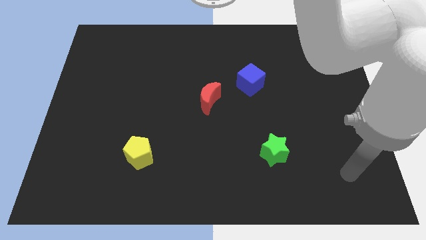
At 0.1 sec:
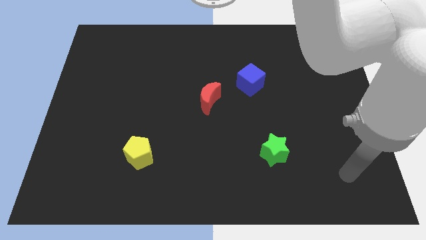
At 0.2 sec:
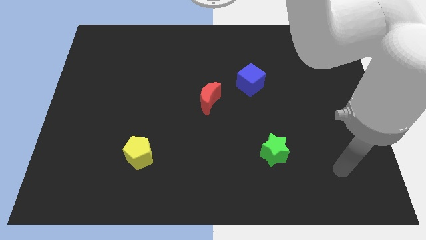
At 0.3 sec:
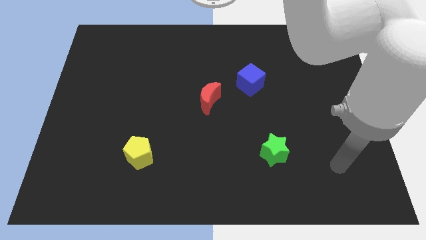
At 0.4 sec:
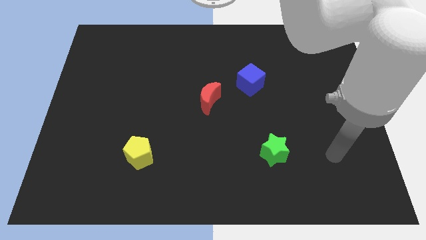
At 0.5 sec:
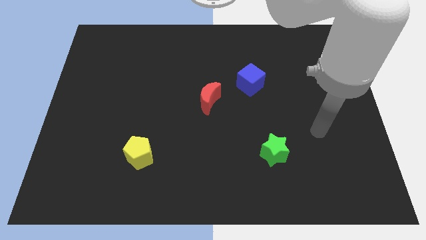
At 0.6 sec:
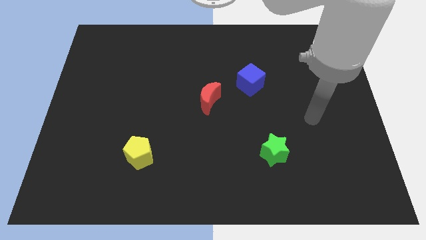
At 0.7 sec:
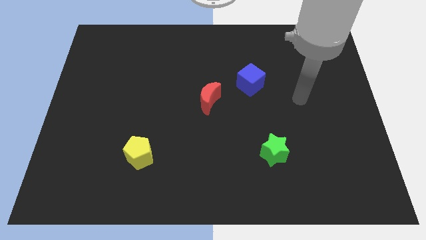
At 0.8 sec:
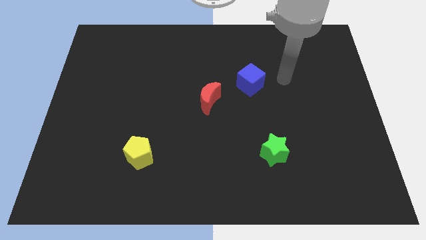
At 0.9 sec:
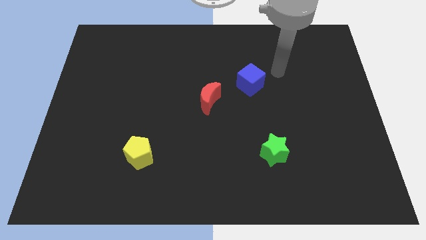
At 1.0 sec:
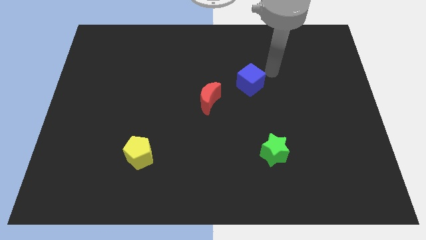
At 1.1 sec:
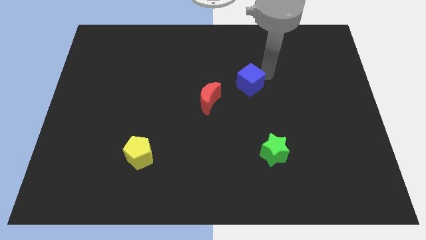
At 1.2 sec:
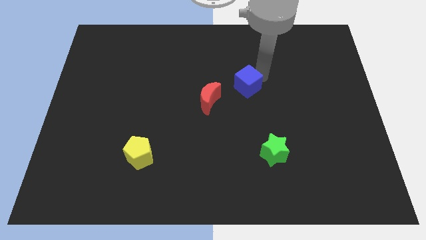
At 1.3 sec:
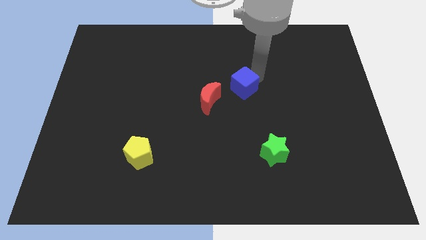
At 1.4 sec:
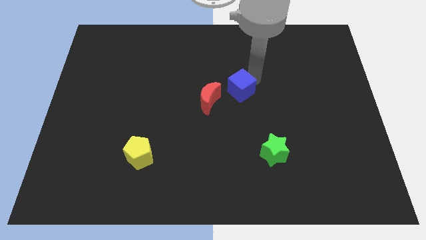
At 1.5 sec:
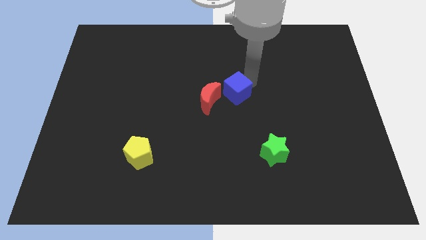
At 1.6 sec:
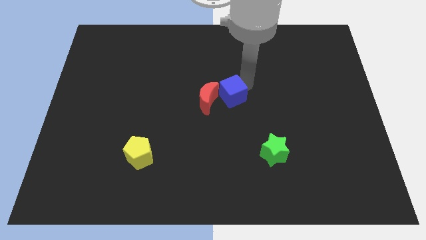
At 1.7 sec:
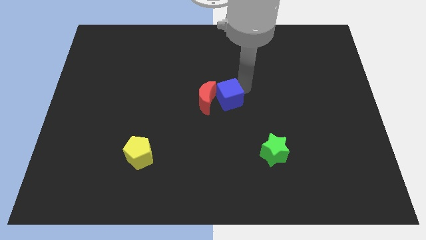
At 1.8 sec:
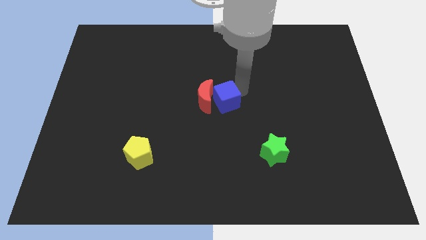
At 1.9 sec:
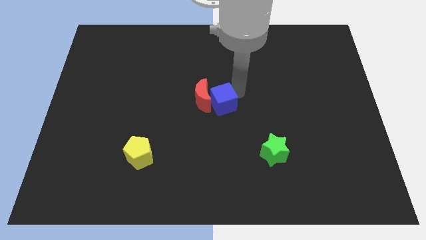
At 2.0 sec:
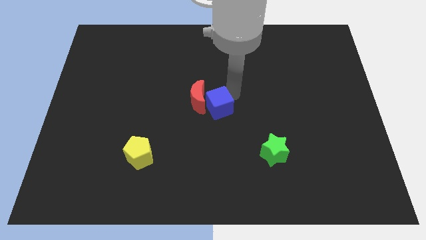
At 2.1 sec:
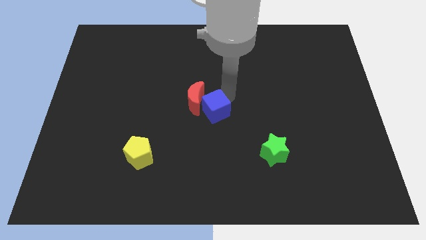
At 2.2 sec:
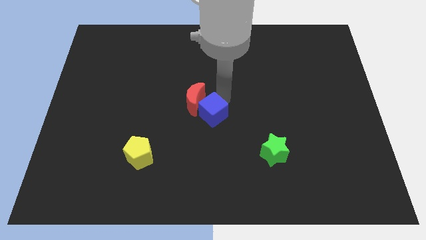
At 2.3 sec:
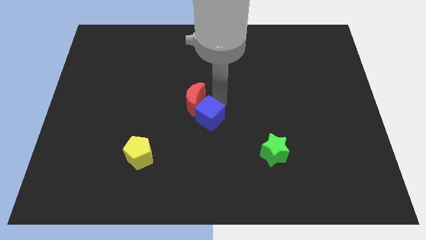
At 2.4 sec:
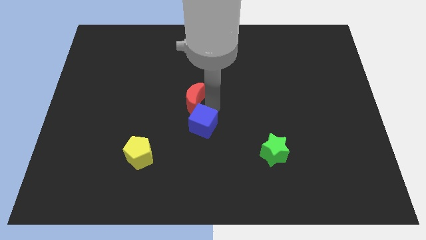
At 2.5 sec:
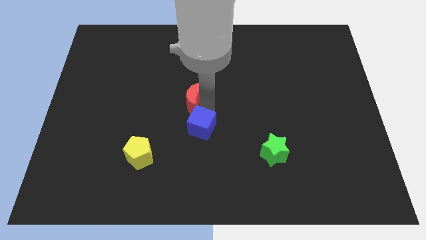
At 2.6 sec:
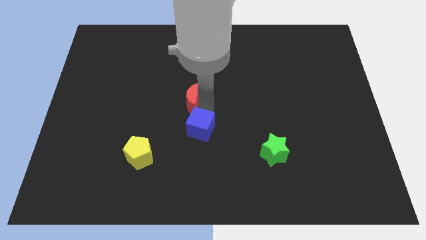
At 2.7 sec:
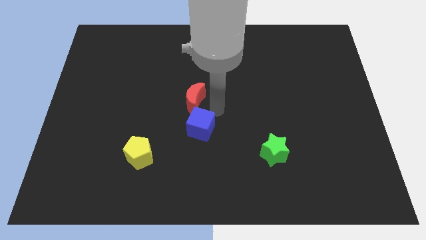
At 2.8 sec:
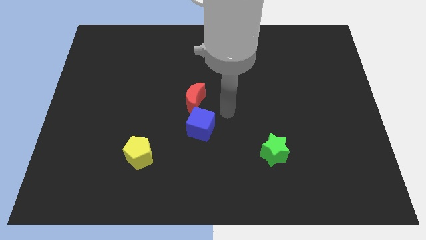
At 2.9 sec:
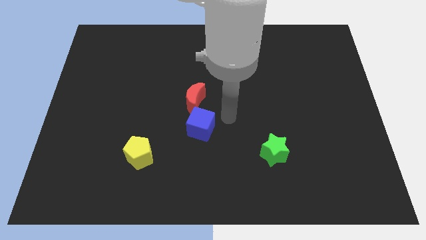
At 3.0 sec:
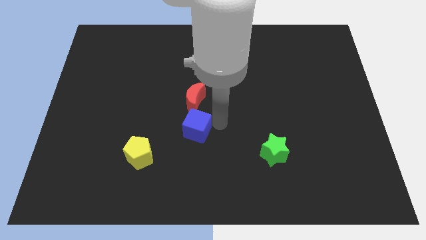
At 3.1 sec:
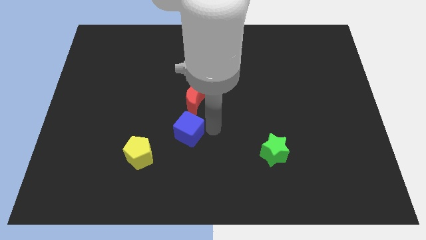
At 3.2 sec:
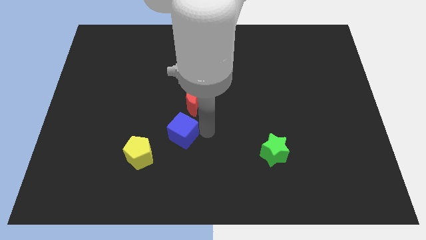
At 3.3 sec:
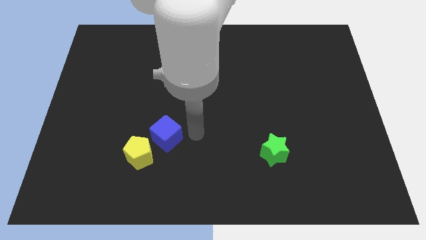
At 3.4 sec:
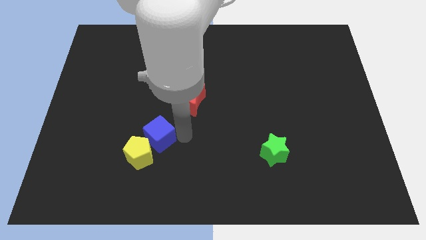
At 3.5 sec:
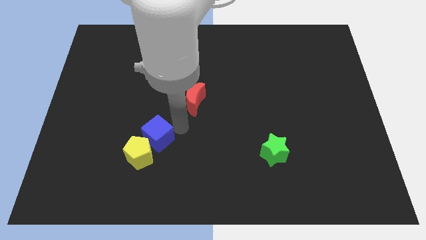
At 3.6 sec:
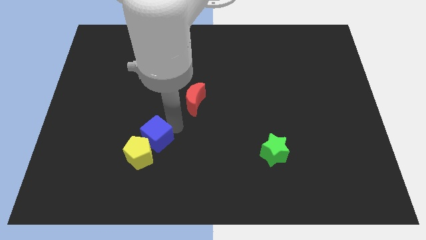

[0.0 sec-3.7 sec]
slide the blue cube to the yellow pentagon

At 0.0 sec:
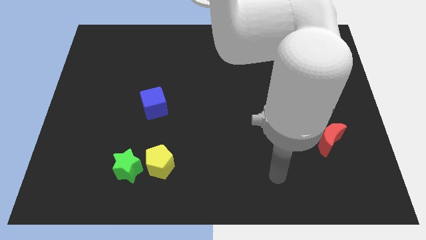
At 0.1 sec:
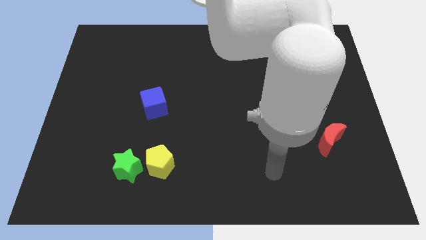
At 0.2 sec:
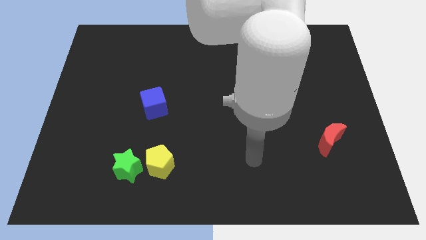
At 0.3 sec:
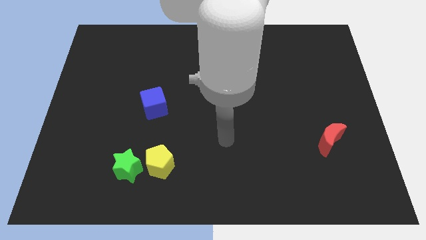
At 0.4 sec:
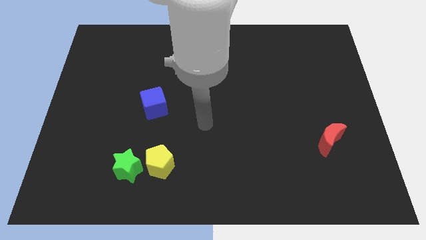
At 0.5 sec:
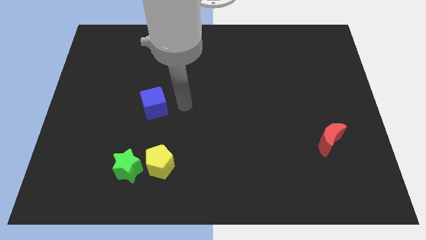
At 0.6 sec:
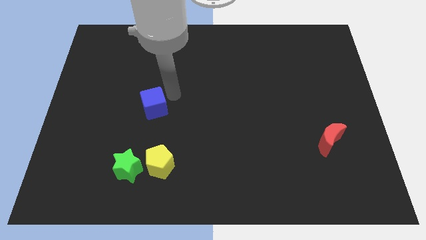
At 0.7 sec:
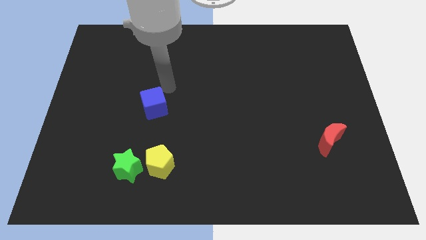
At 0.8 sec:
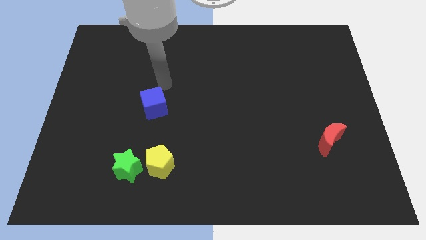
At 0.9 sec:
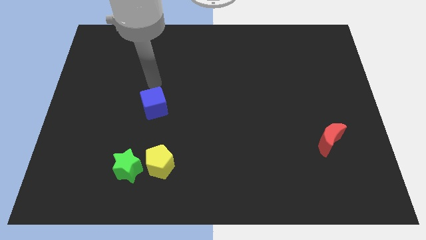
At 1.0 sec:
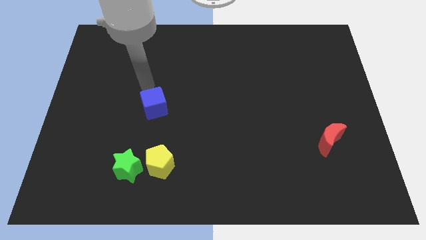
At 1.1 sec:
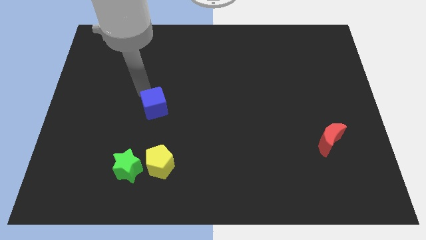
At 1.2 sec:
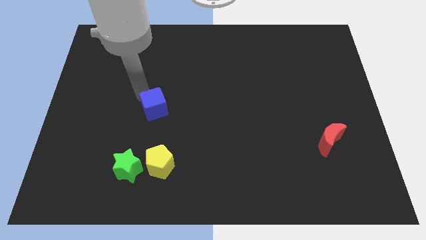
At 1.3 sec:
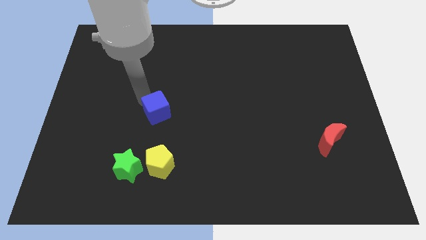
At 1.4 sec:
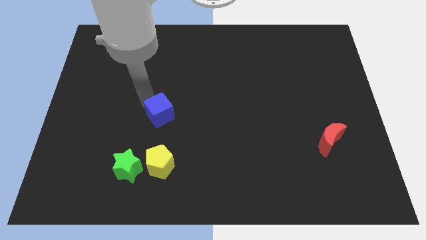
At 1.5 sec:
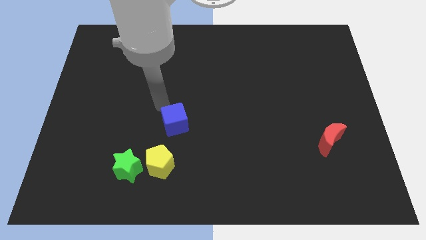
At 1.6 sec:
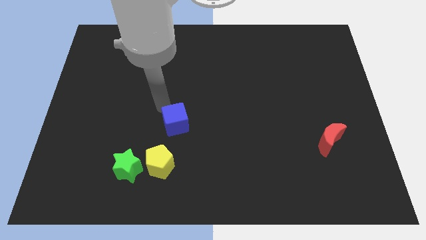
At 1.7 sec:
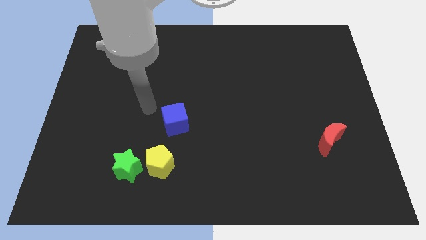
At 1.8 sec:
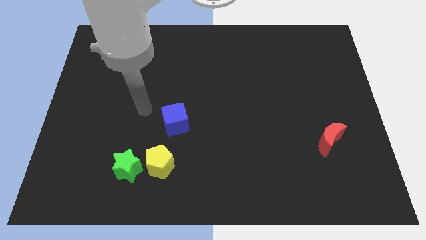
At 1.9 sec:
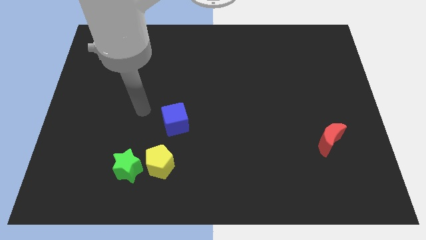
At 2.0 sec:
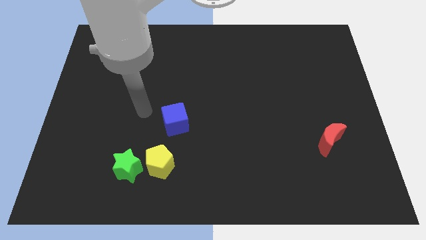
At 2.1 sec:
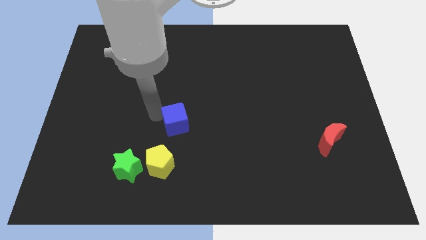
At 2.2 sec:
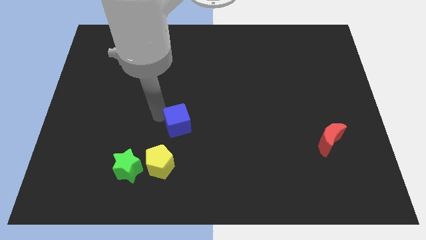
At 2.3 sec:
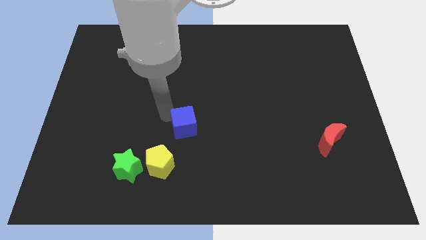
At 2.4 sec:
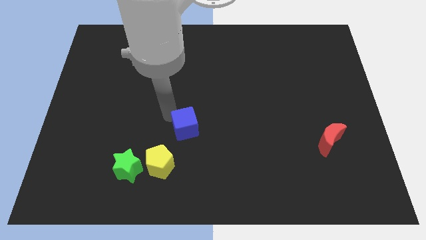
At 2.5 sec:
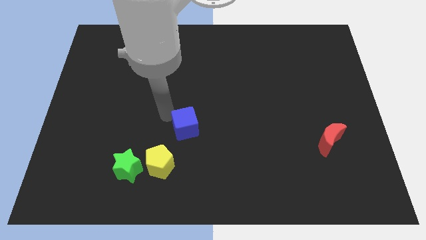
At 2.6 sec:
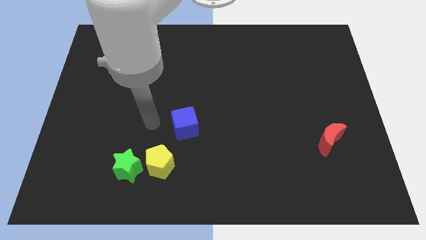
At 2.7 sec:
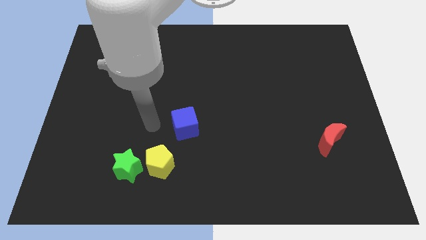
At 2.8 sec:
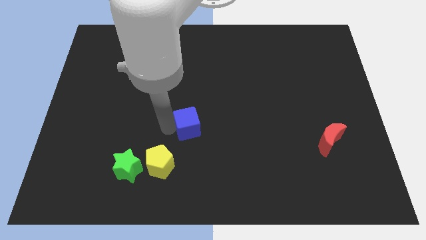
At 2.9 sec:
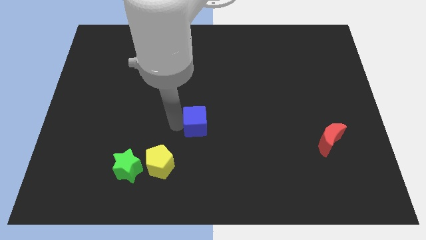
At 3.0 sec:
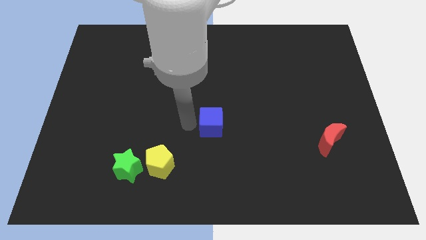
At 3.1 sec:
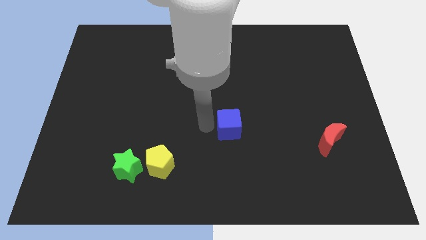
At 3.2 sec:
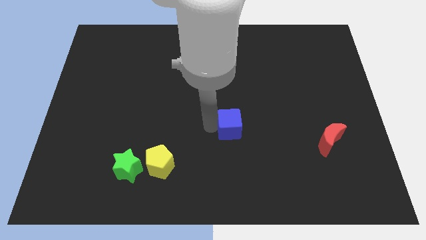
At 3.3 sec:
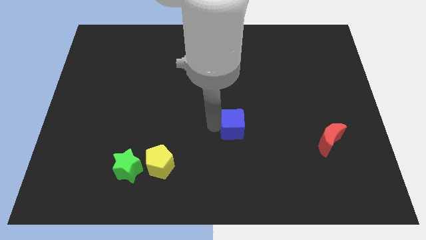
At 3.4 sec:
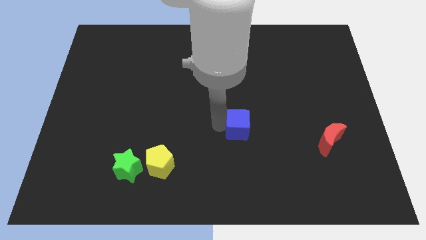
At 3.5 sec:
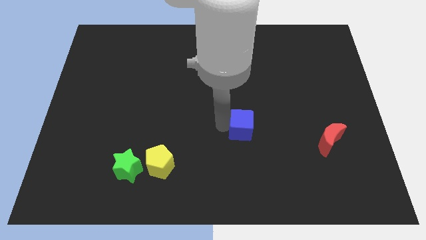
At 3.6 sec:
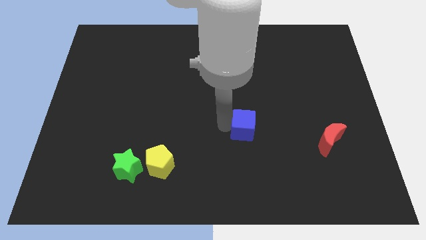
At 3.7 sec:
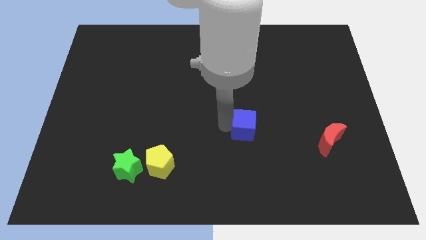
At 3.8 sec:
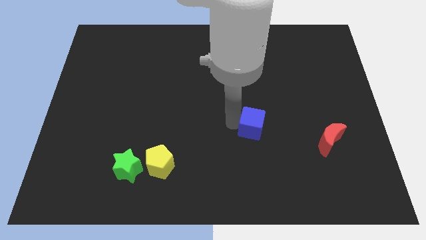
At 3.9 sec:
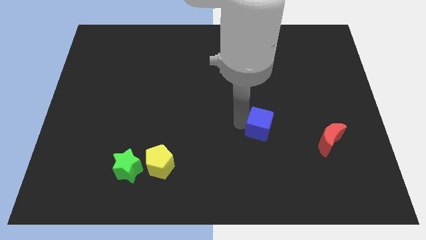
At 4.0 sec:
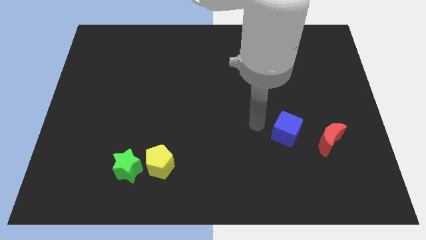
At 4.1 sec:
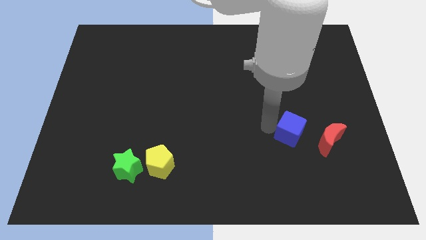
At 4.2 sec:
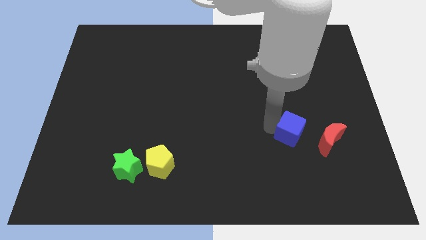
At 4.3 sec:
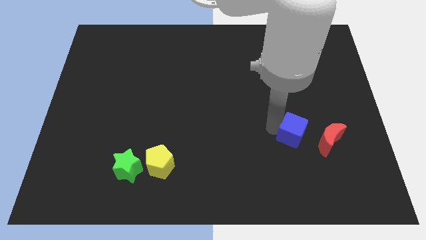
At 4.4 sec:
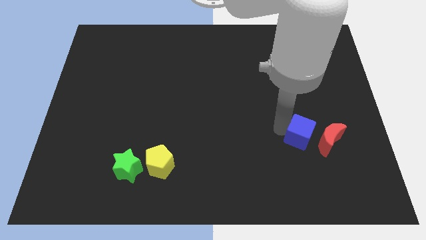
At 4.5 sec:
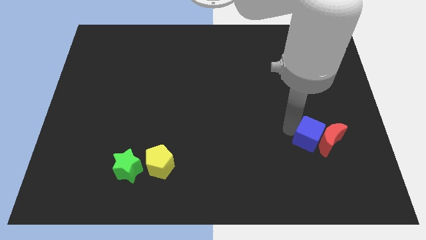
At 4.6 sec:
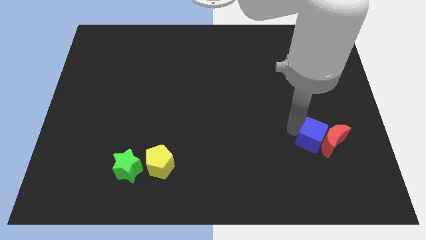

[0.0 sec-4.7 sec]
push the cube to the red moon
